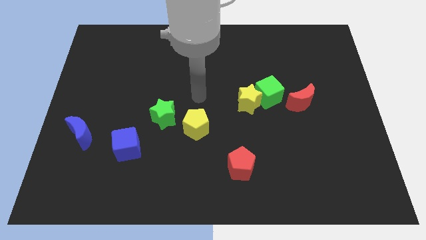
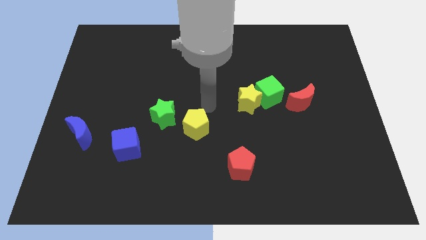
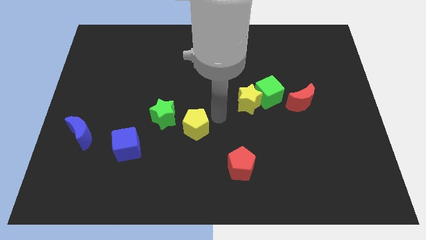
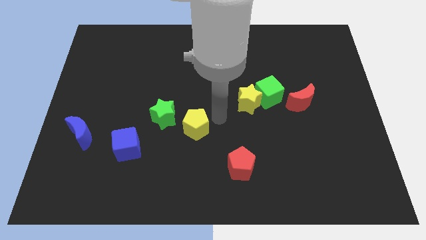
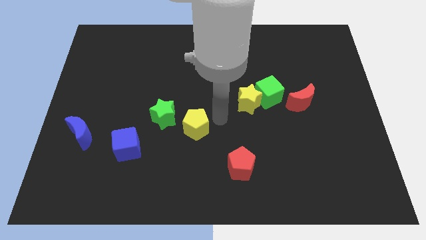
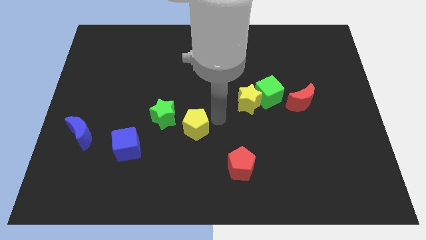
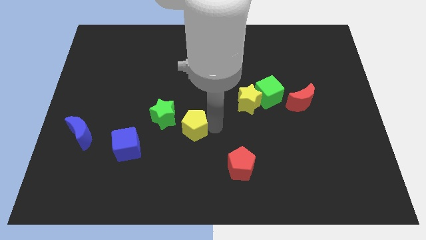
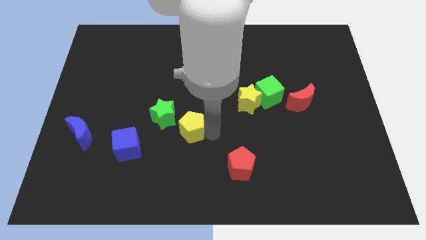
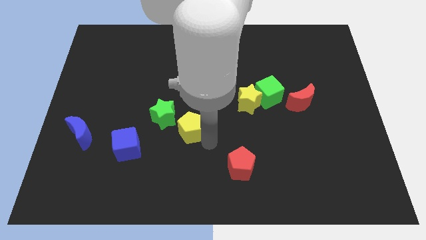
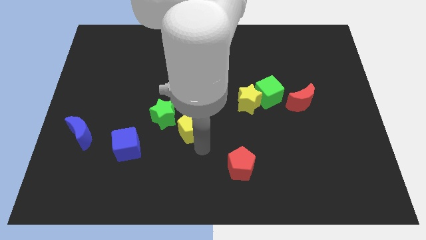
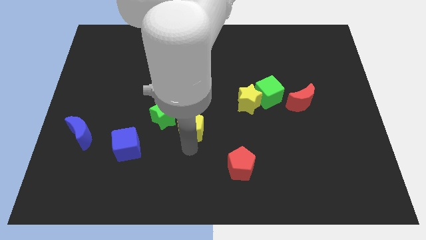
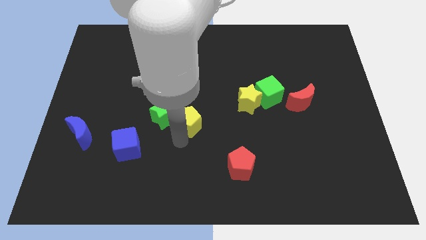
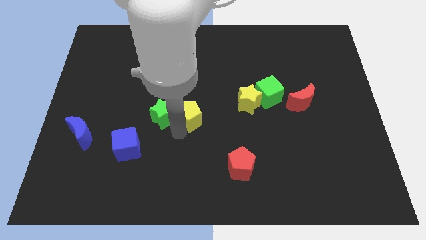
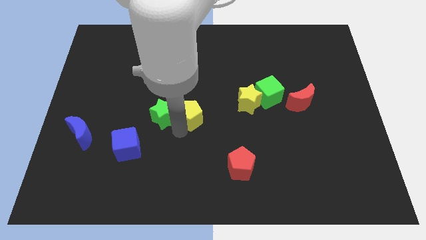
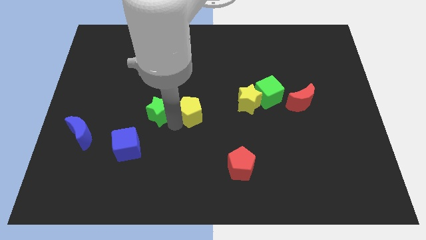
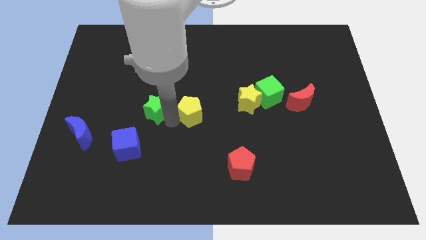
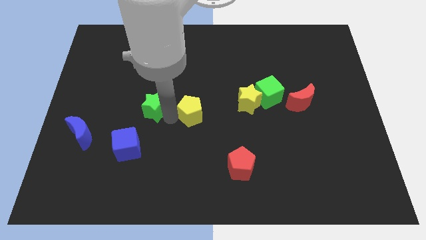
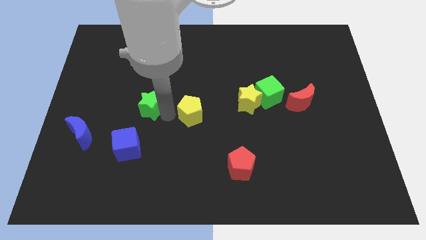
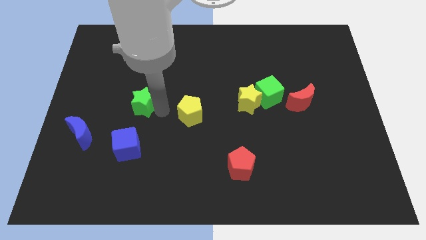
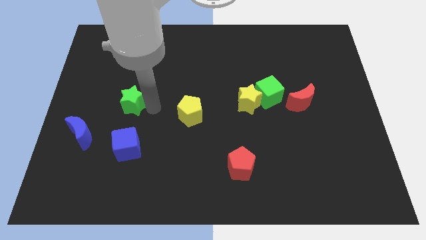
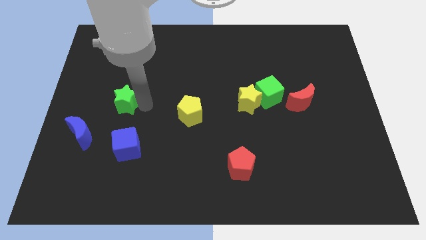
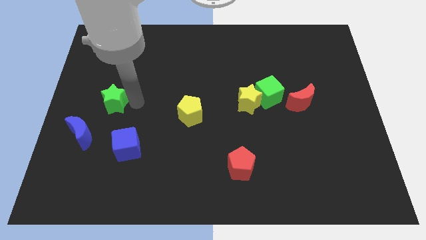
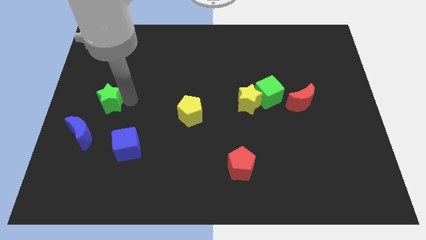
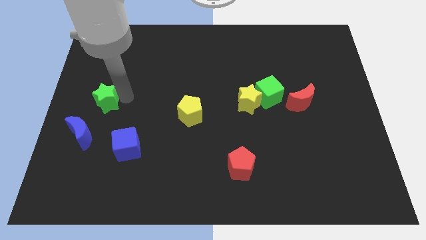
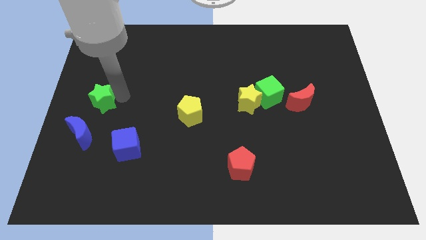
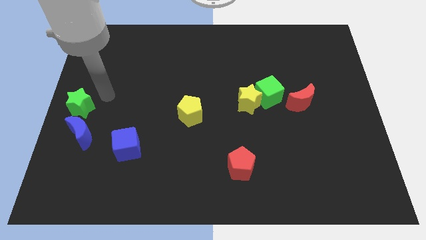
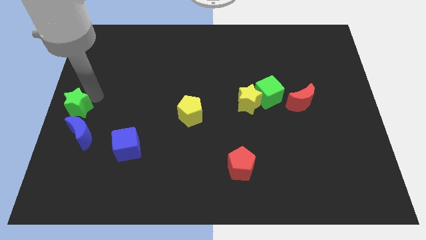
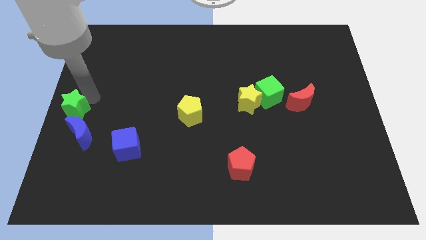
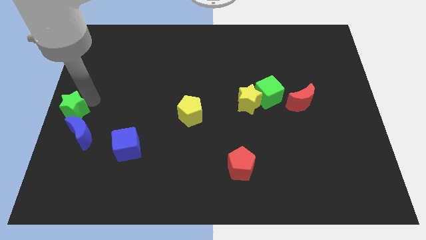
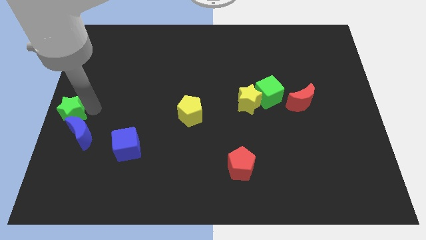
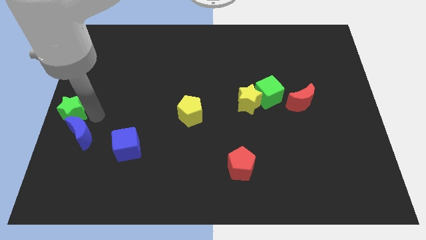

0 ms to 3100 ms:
slide green star to the center left

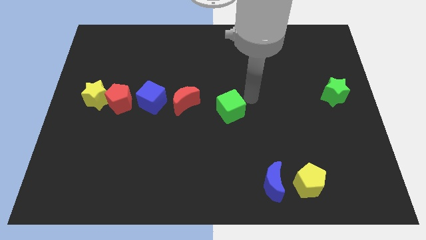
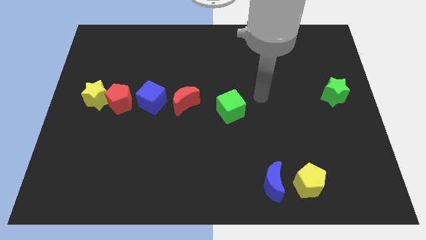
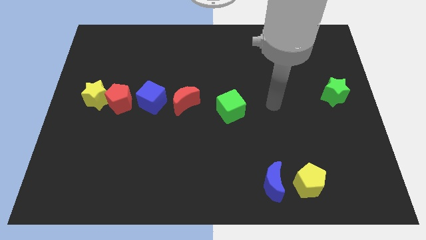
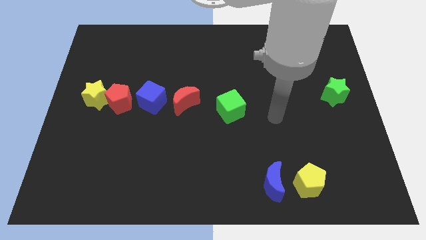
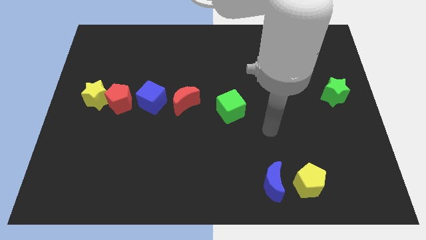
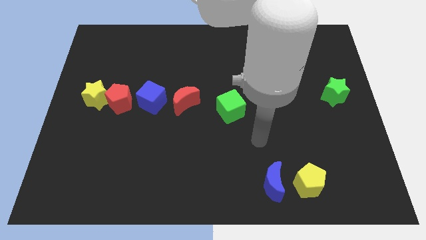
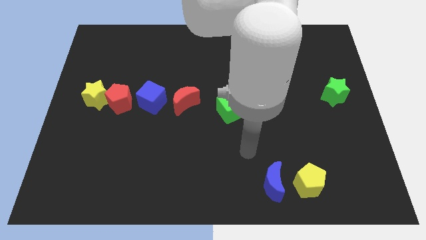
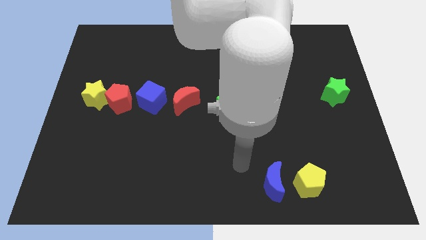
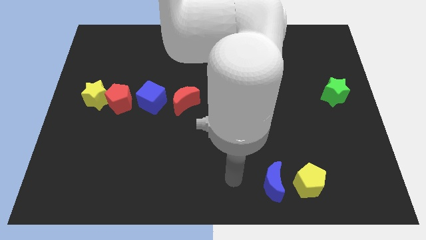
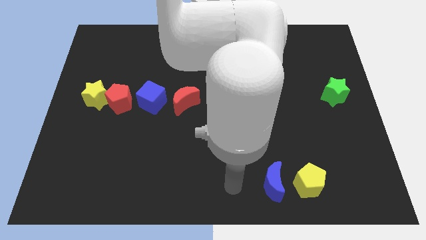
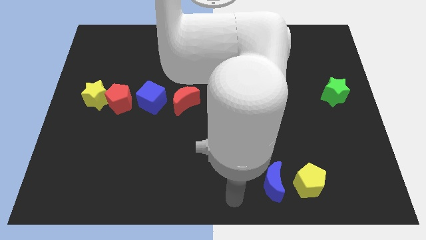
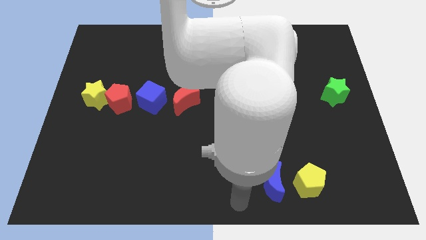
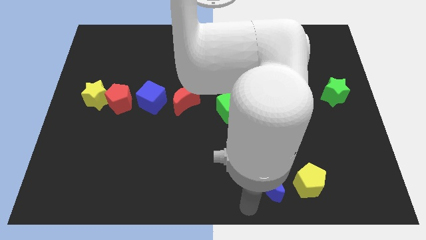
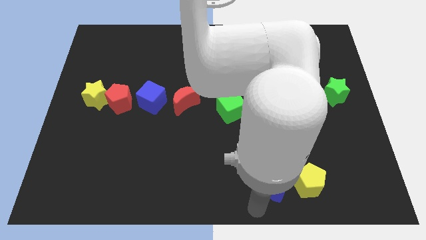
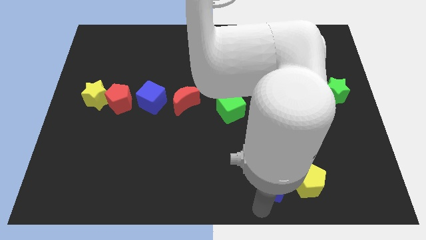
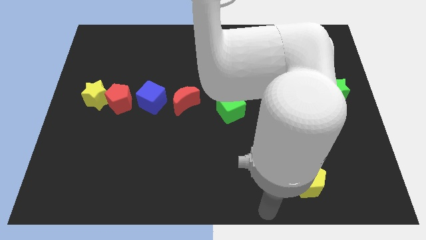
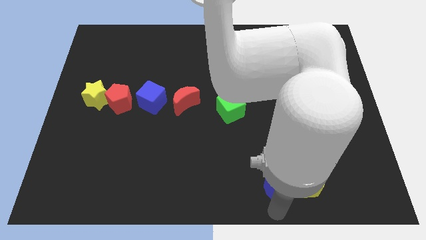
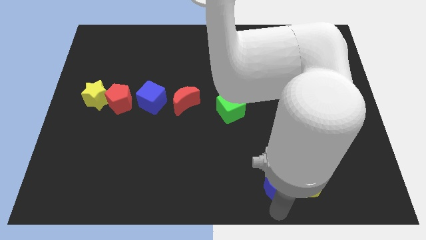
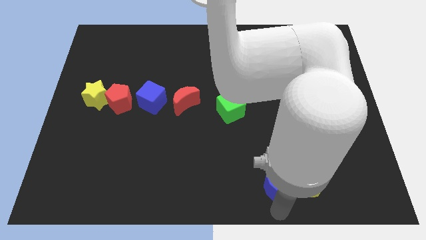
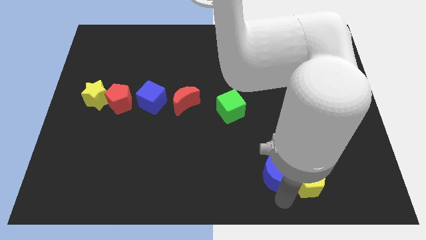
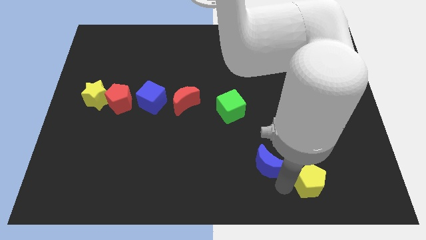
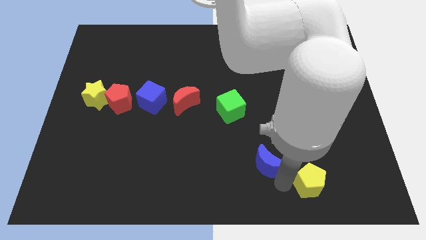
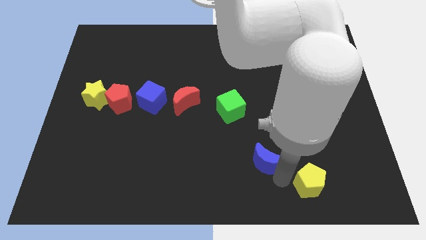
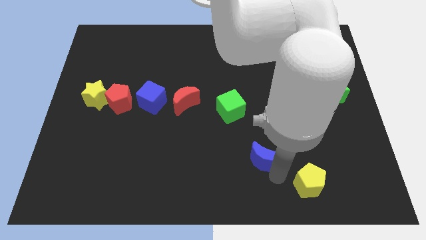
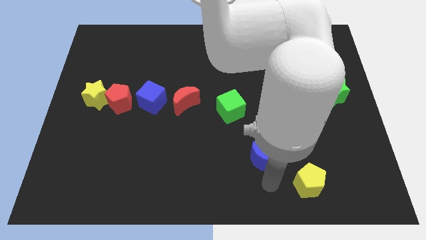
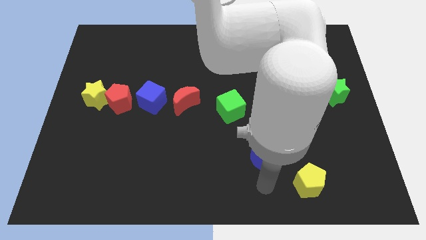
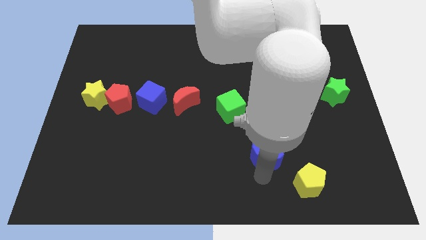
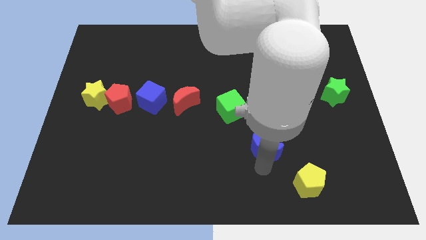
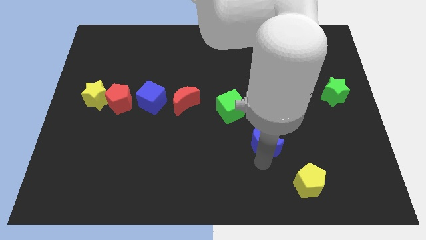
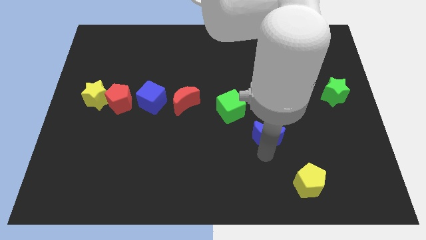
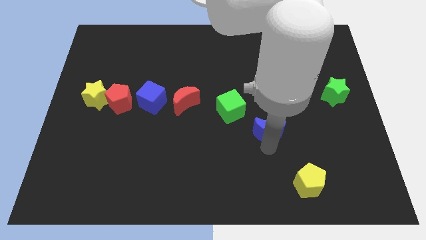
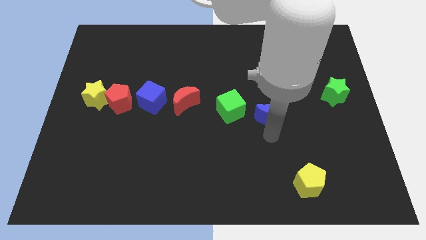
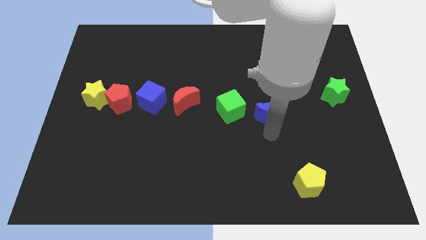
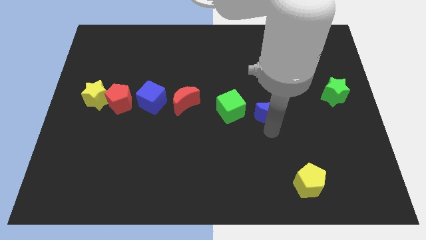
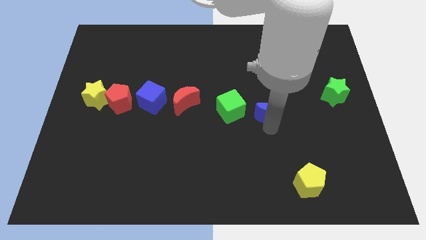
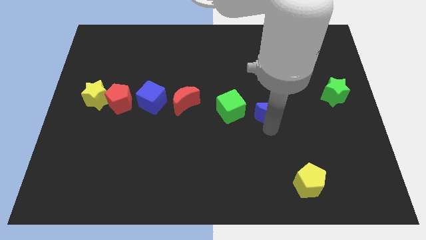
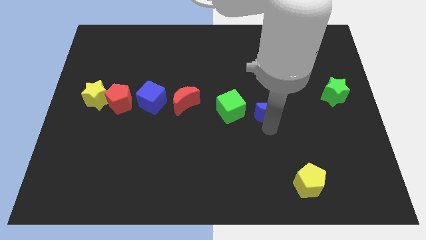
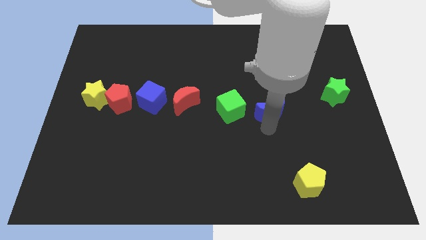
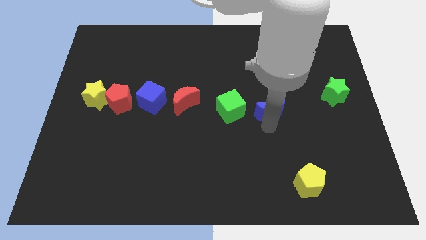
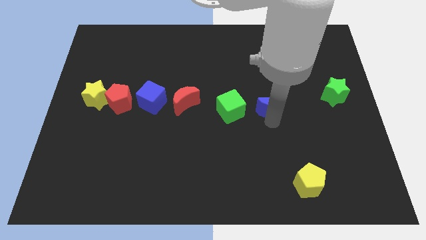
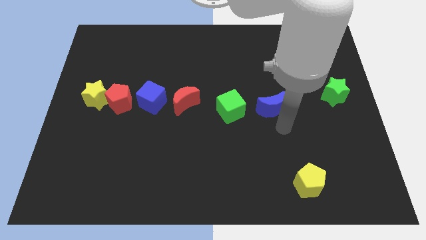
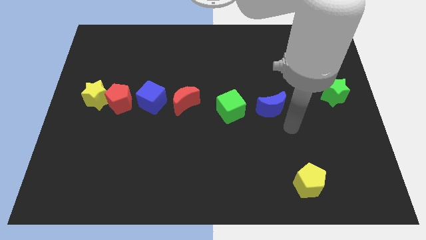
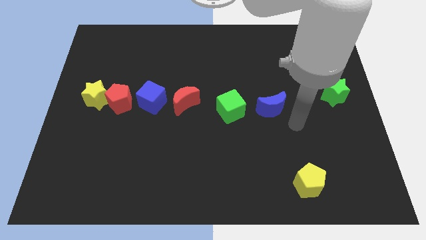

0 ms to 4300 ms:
move the blue moon and place it close to the green cube

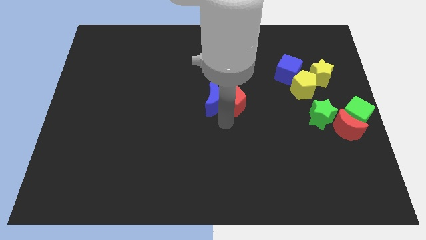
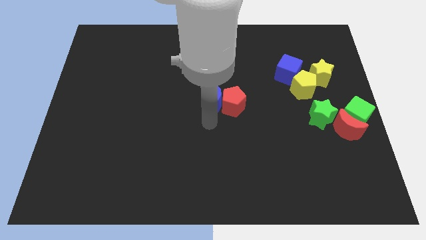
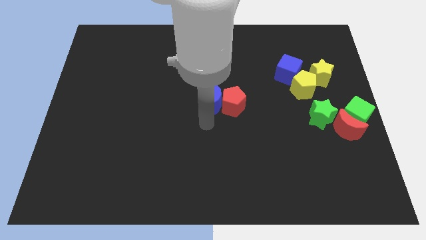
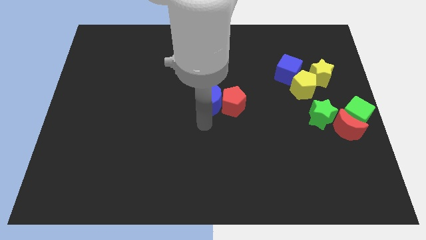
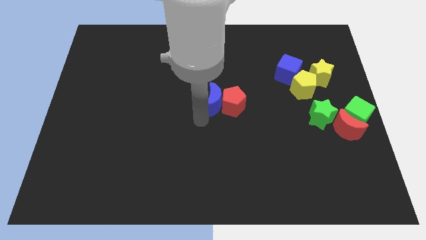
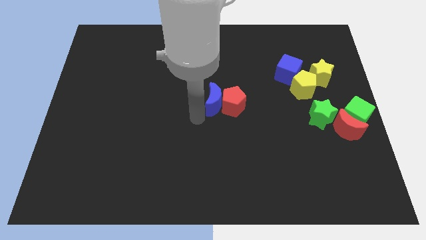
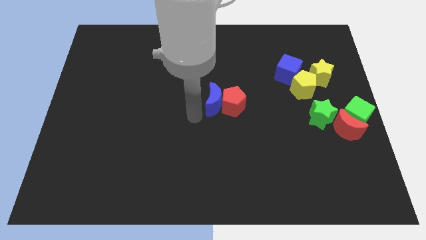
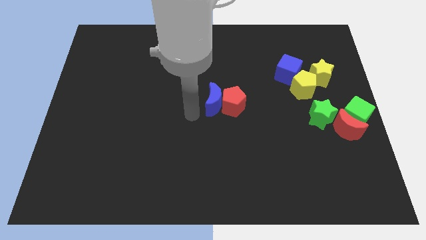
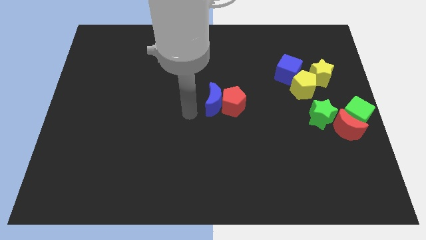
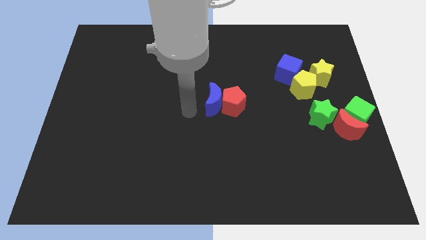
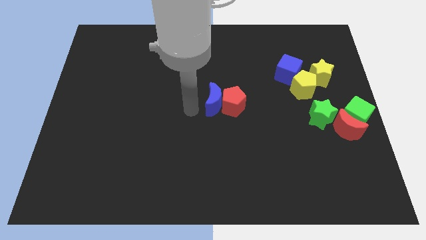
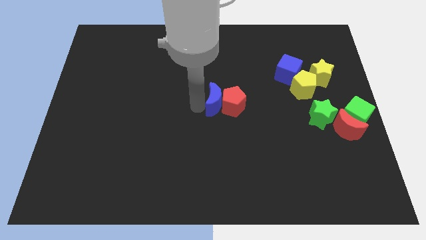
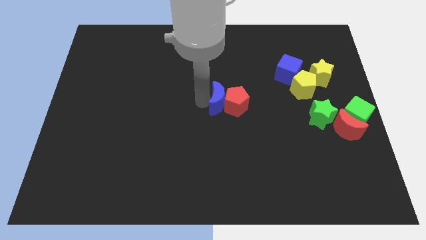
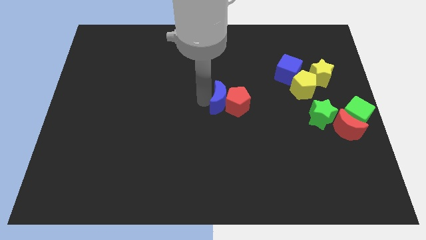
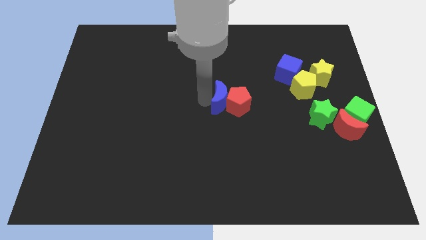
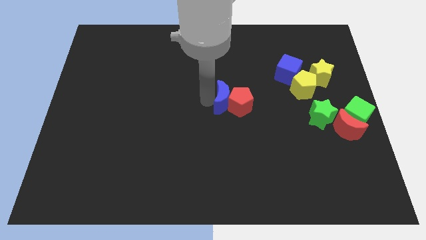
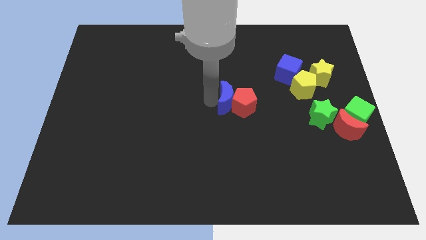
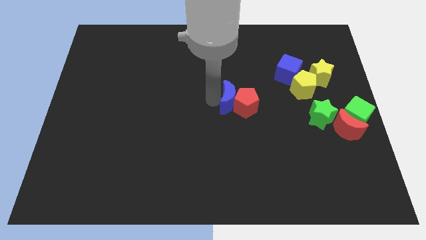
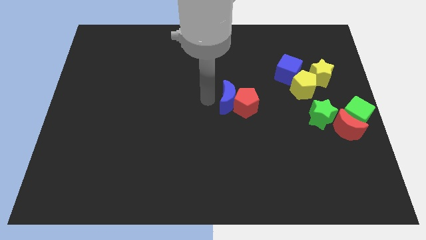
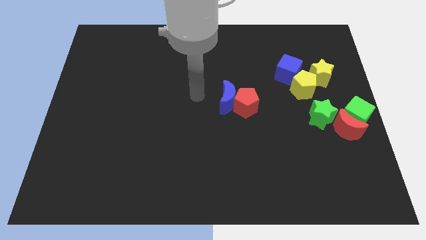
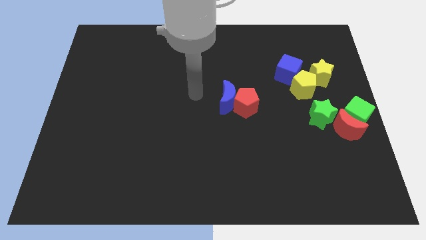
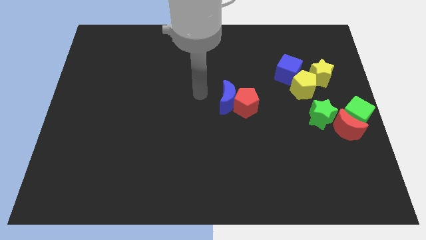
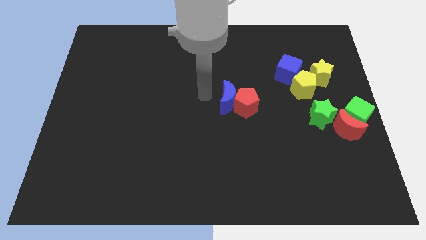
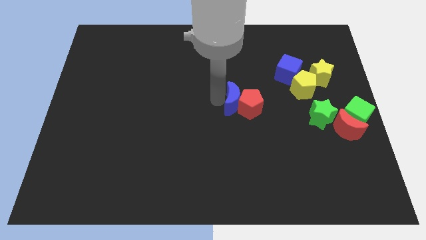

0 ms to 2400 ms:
push the red pentagon slightly right with the blue crescent
